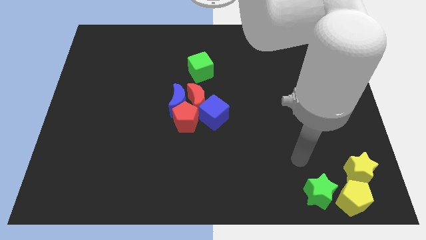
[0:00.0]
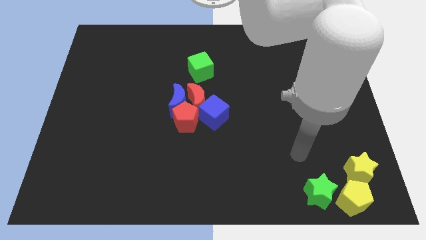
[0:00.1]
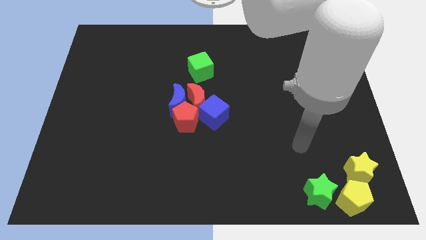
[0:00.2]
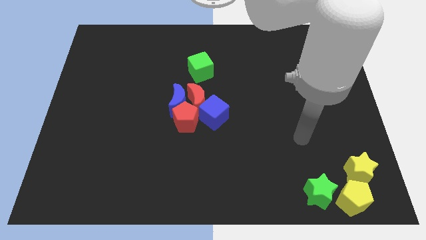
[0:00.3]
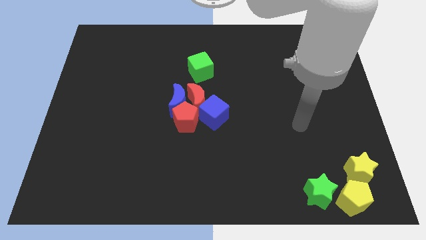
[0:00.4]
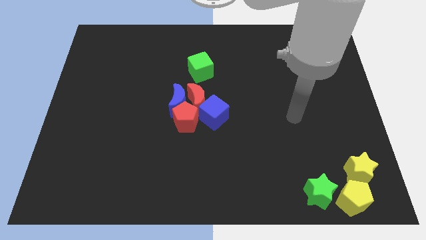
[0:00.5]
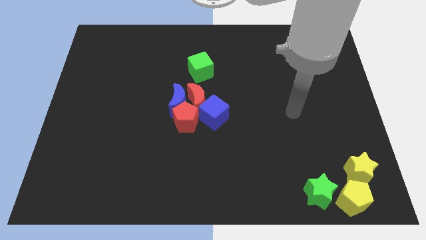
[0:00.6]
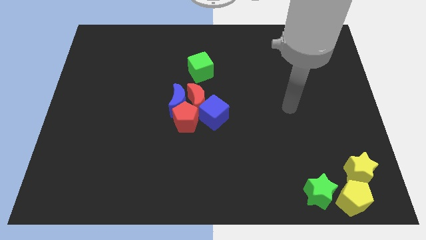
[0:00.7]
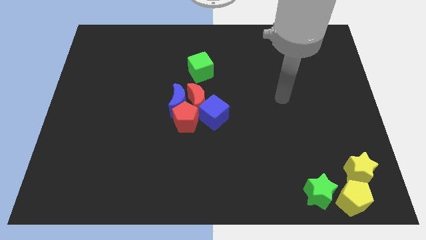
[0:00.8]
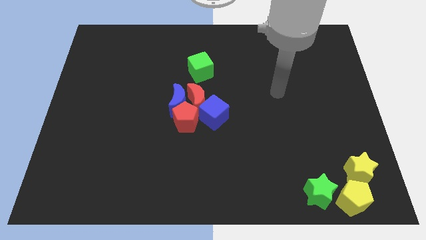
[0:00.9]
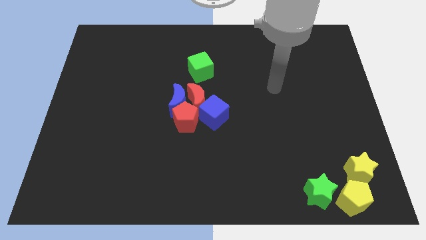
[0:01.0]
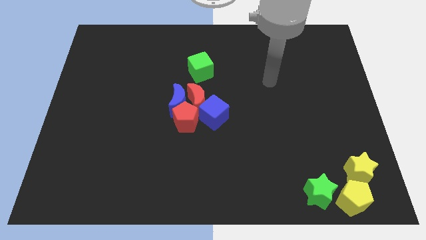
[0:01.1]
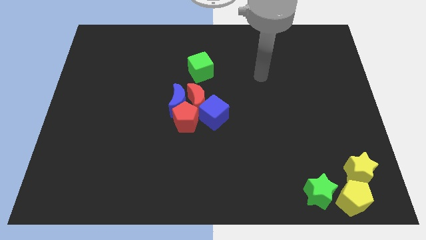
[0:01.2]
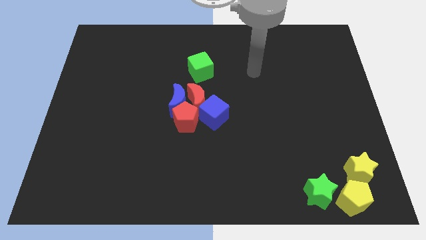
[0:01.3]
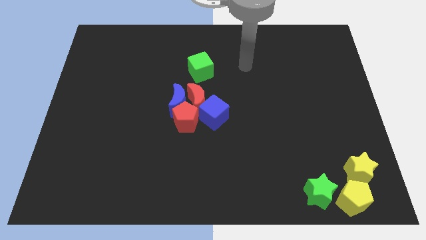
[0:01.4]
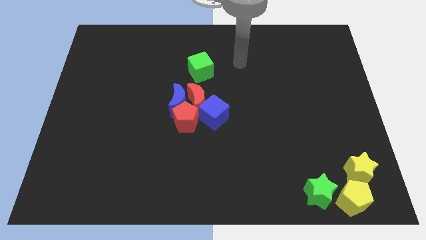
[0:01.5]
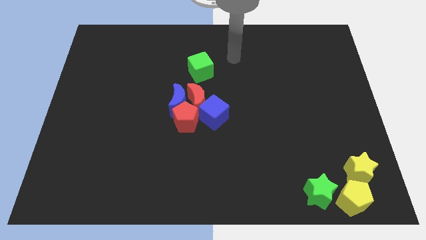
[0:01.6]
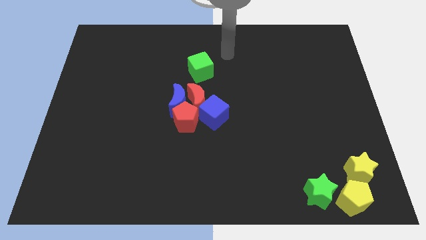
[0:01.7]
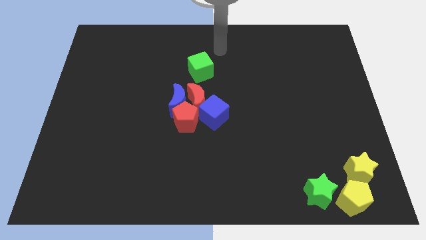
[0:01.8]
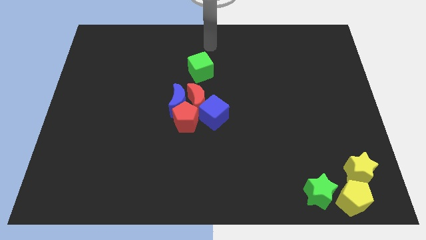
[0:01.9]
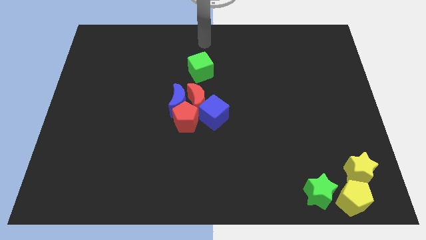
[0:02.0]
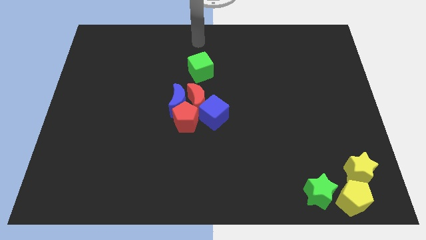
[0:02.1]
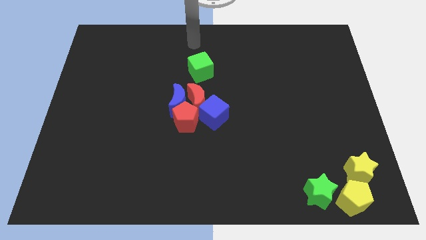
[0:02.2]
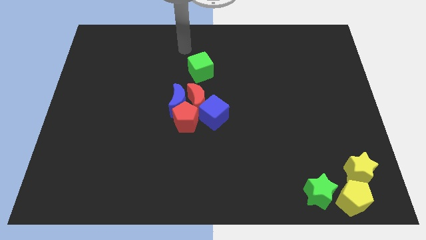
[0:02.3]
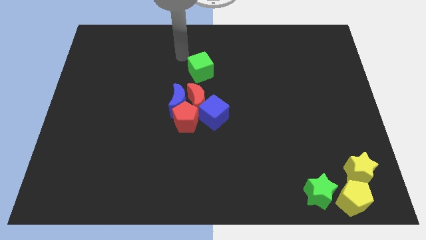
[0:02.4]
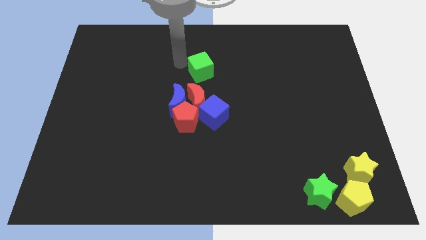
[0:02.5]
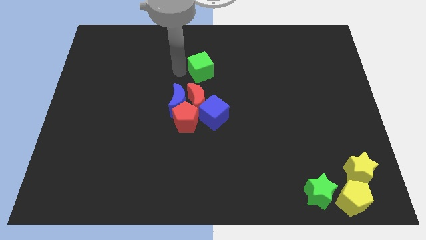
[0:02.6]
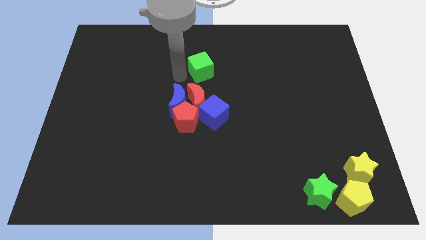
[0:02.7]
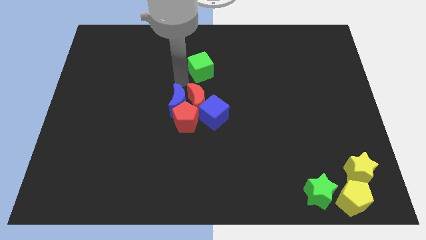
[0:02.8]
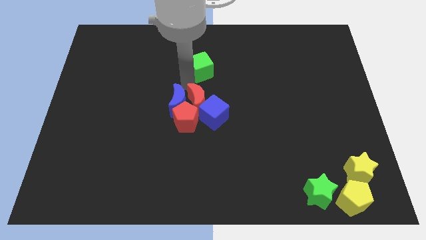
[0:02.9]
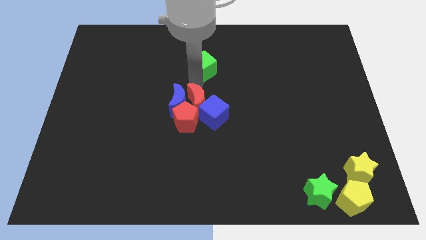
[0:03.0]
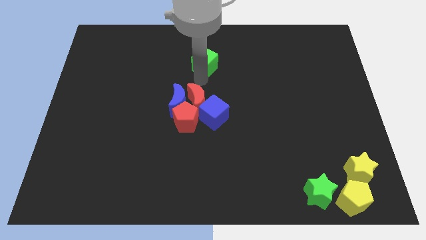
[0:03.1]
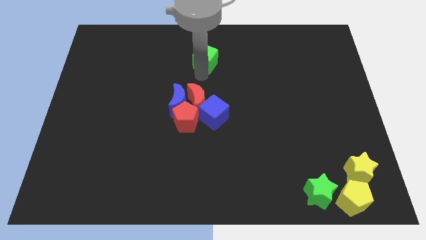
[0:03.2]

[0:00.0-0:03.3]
slightly move the green cube towards top

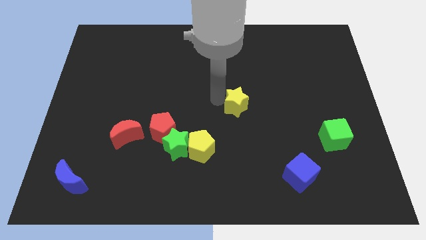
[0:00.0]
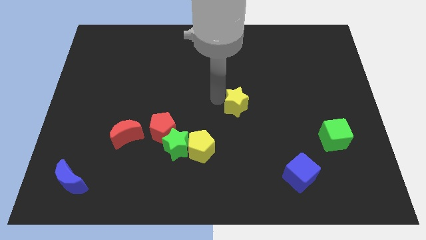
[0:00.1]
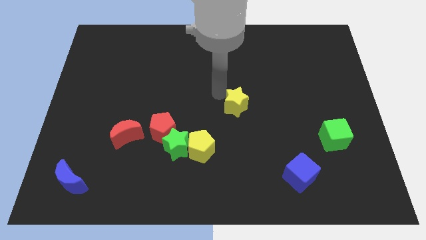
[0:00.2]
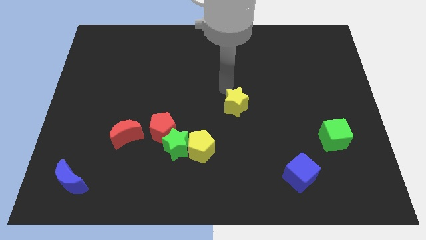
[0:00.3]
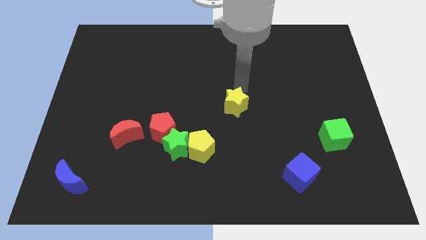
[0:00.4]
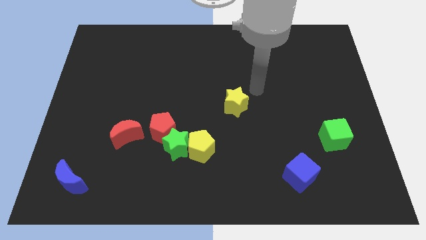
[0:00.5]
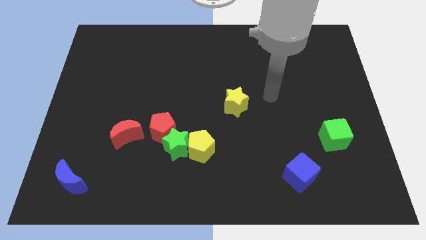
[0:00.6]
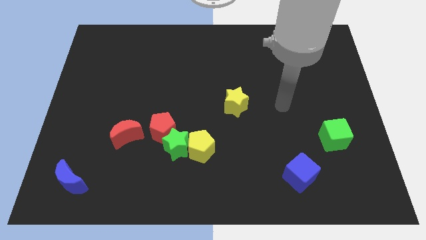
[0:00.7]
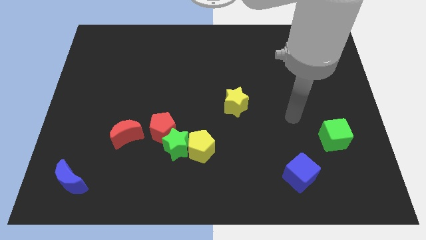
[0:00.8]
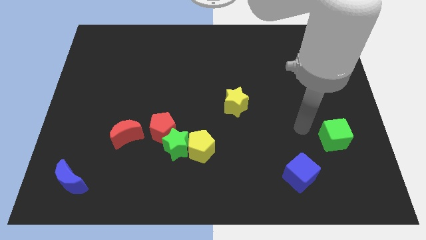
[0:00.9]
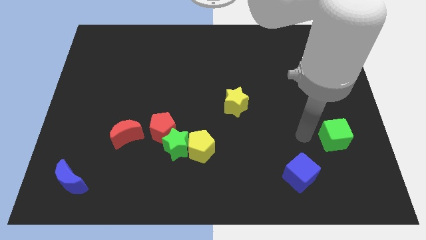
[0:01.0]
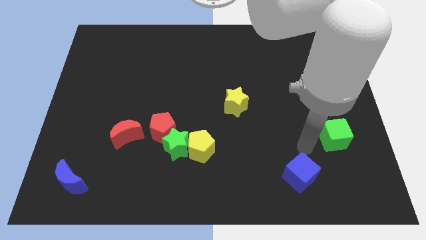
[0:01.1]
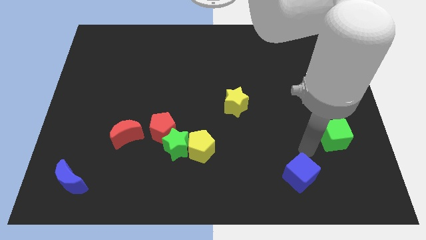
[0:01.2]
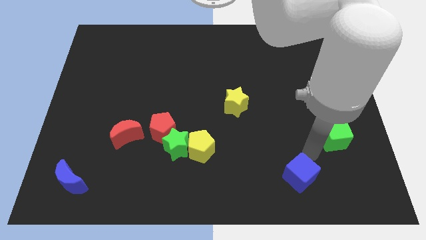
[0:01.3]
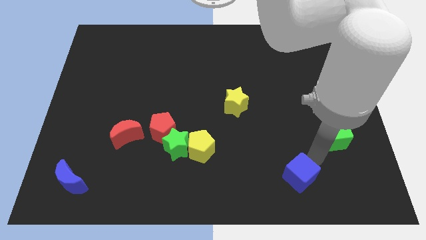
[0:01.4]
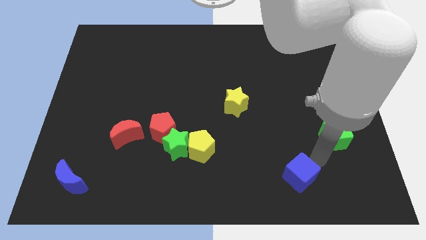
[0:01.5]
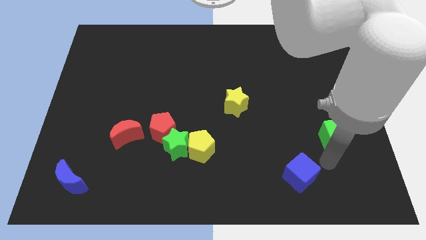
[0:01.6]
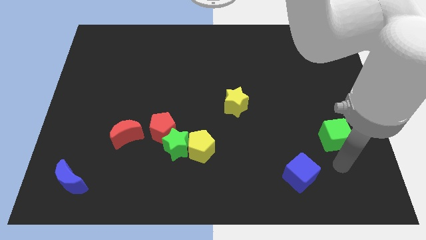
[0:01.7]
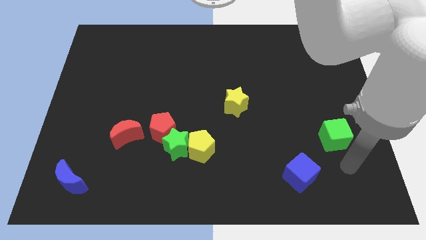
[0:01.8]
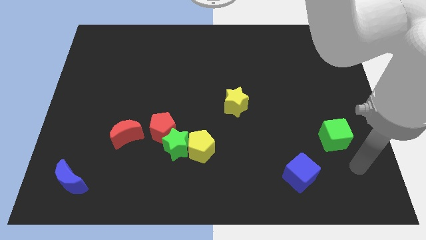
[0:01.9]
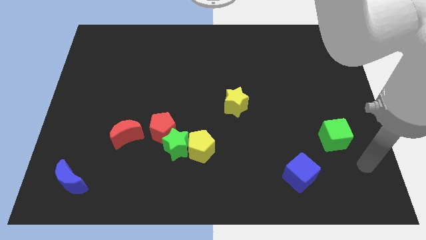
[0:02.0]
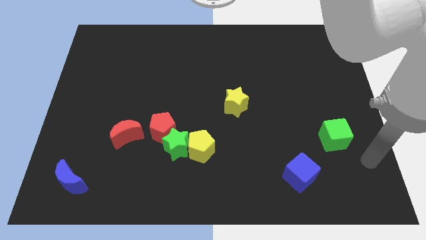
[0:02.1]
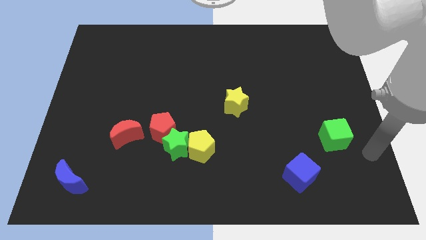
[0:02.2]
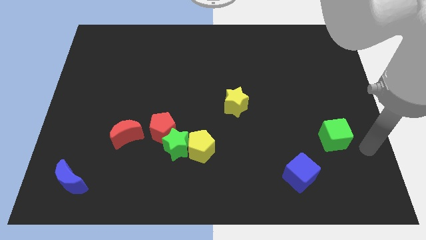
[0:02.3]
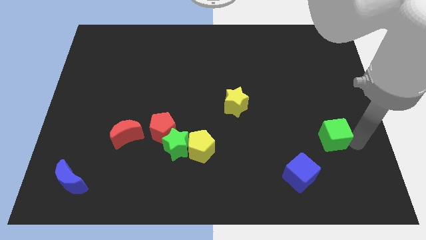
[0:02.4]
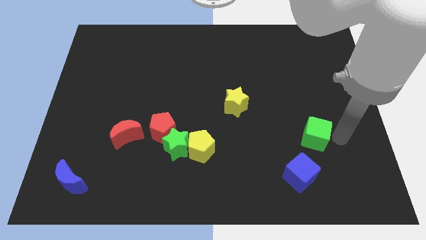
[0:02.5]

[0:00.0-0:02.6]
move the arm away from the yellow star

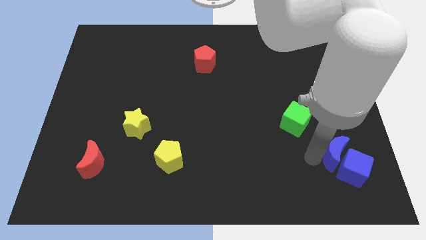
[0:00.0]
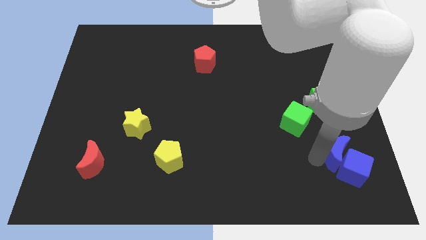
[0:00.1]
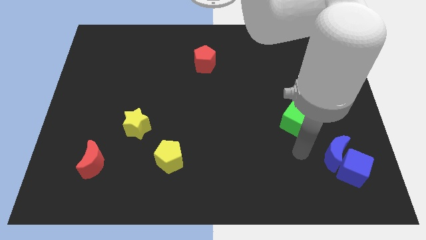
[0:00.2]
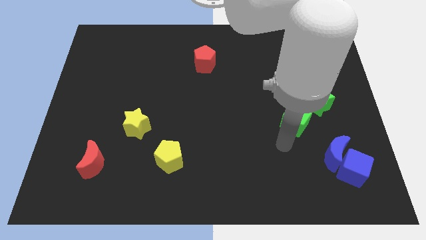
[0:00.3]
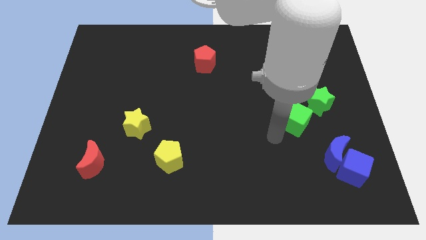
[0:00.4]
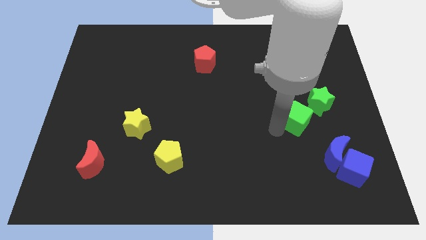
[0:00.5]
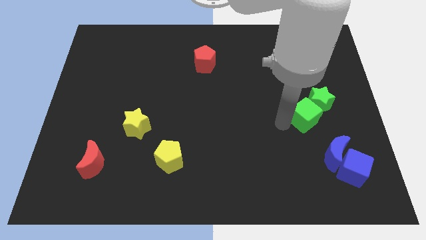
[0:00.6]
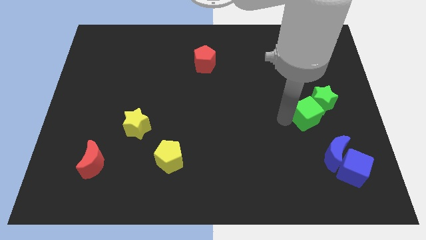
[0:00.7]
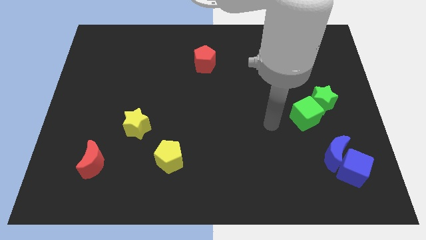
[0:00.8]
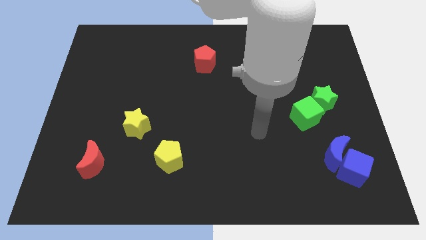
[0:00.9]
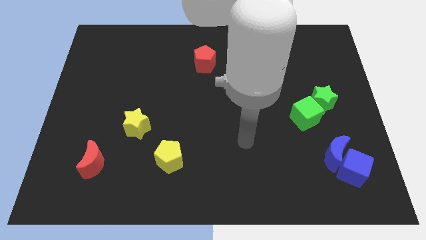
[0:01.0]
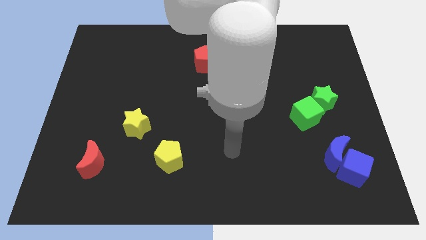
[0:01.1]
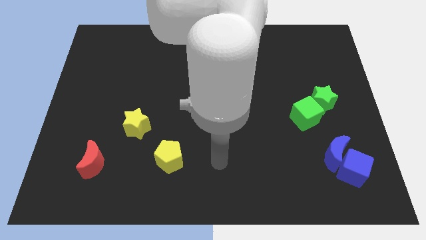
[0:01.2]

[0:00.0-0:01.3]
slide the green cube into the green star

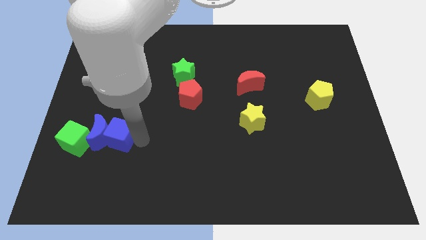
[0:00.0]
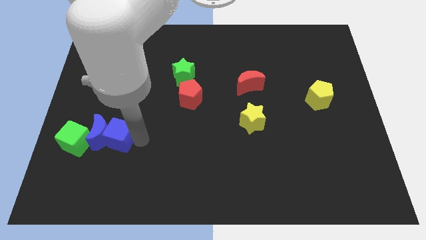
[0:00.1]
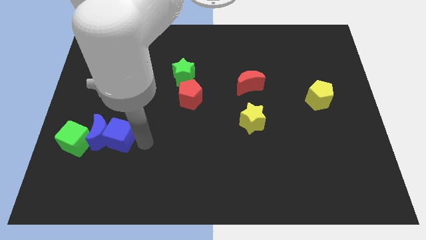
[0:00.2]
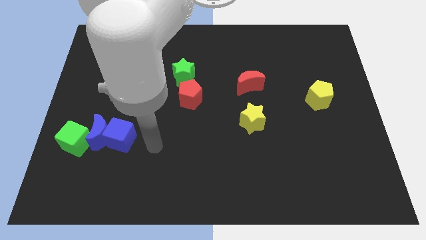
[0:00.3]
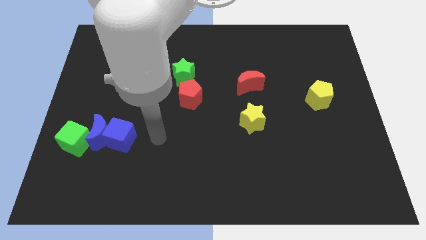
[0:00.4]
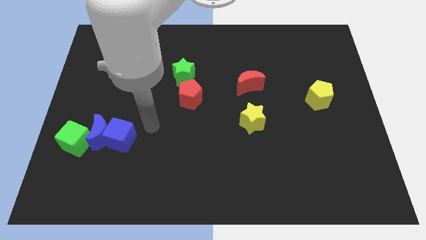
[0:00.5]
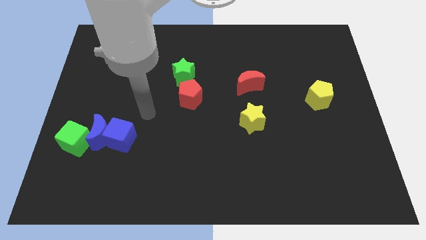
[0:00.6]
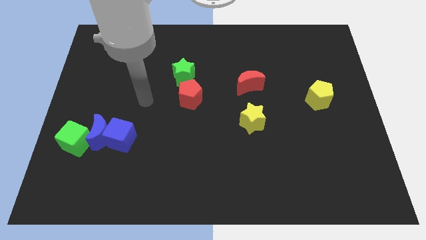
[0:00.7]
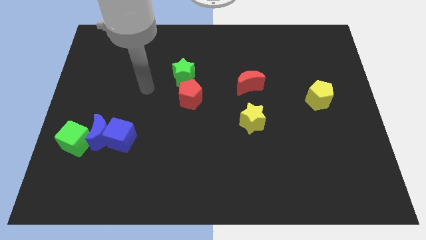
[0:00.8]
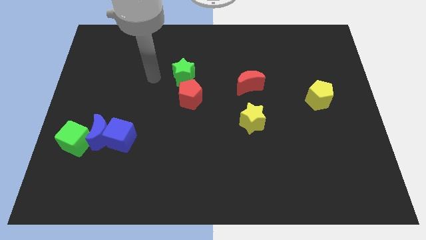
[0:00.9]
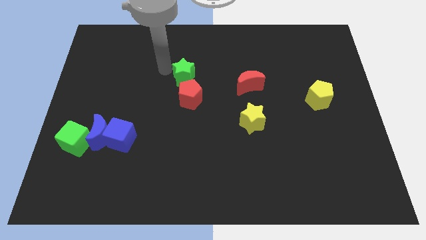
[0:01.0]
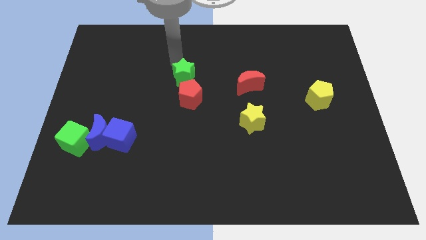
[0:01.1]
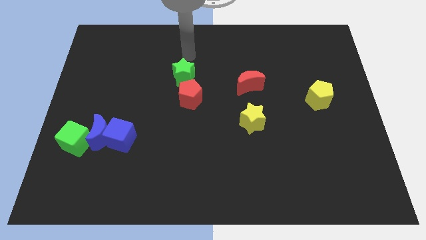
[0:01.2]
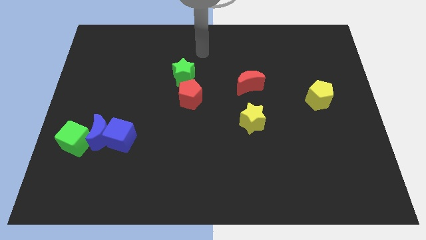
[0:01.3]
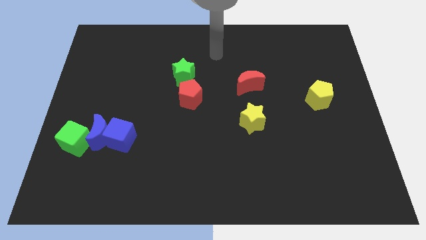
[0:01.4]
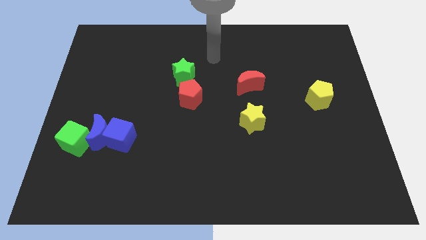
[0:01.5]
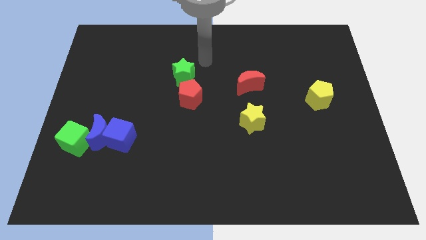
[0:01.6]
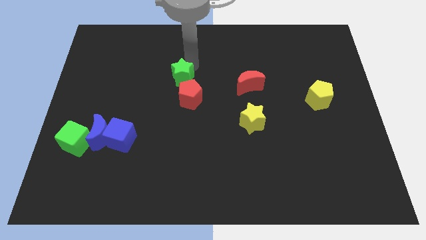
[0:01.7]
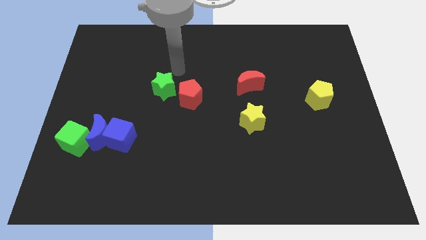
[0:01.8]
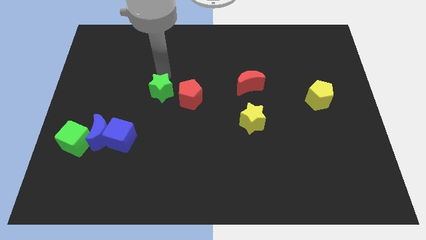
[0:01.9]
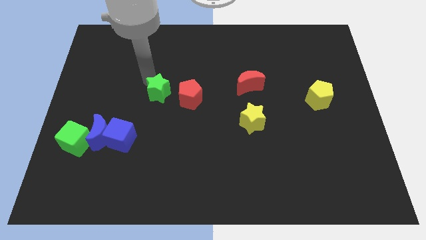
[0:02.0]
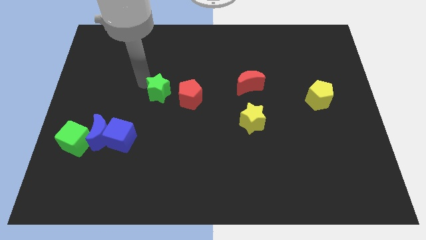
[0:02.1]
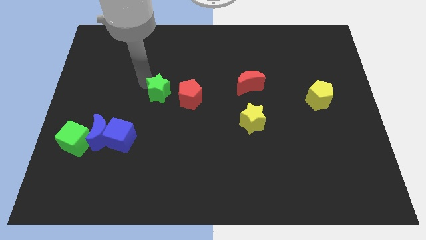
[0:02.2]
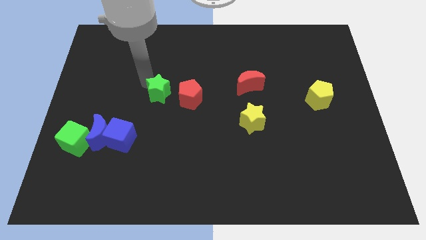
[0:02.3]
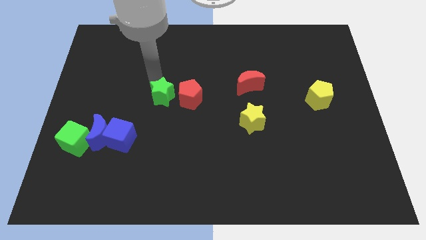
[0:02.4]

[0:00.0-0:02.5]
move the green star to the left side of the red pentagon
